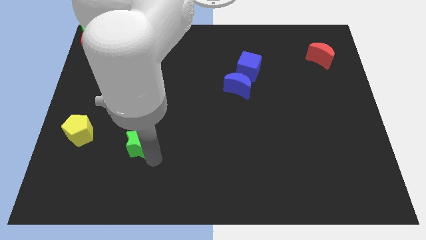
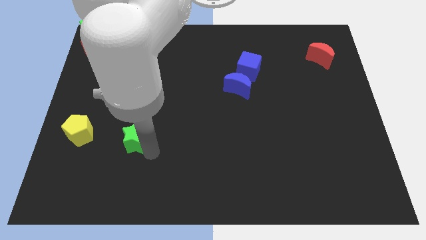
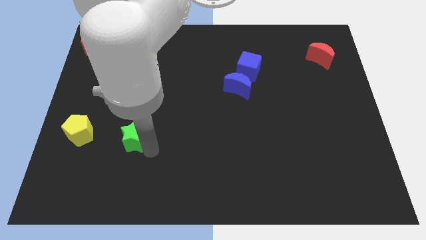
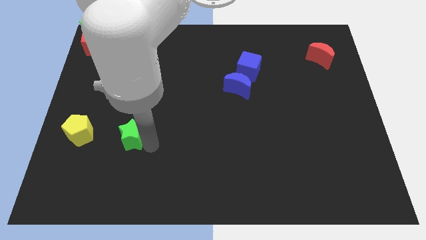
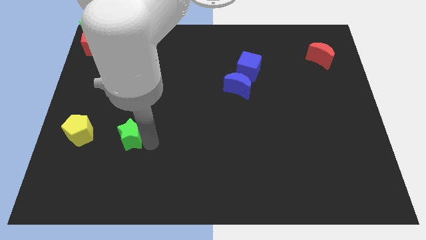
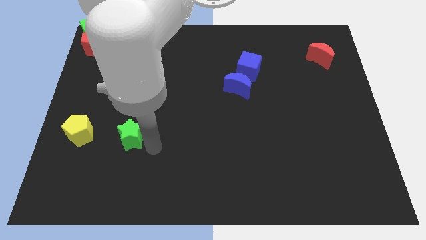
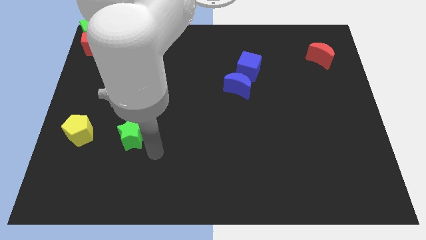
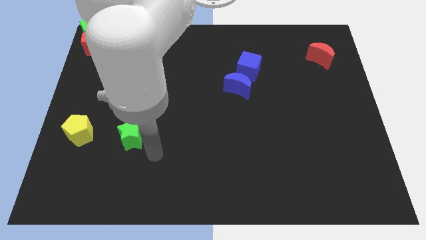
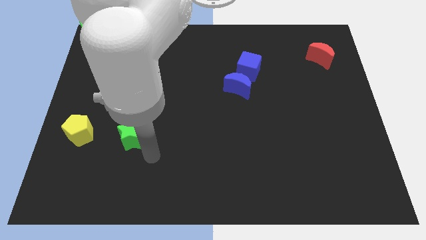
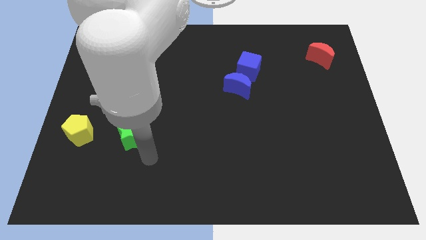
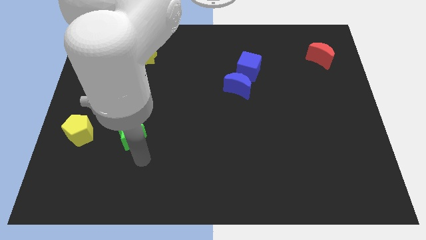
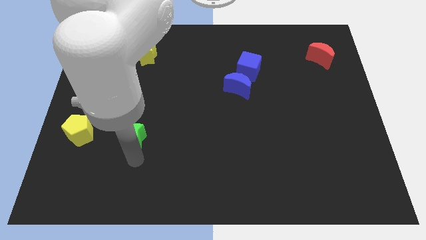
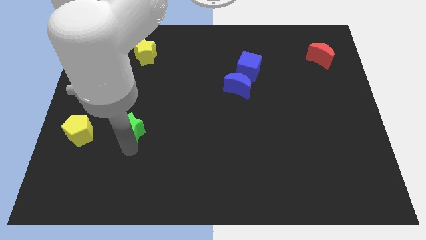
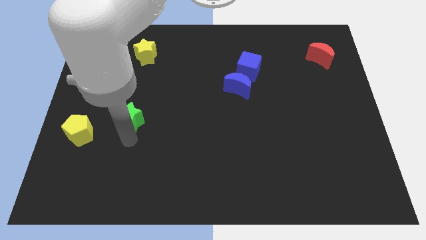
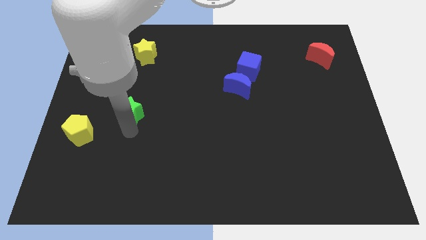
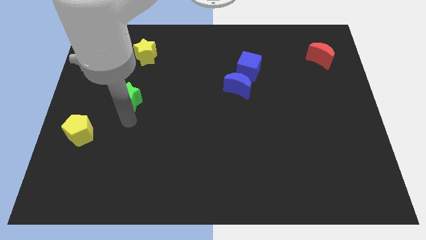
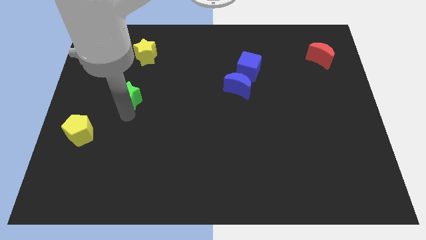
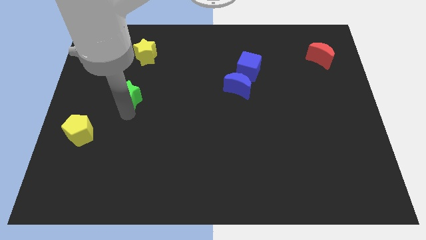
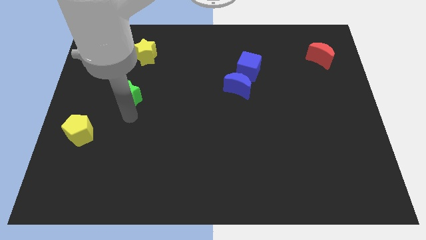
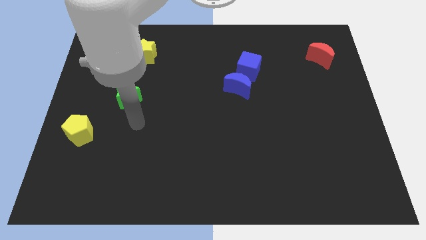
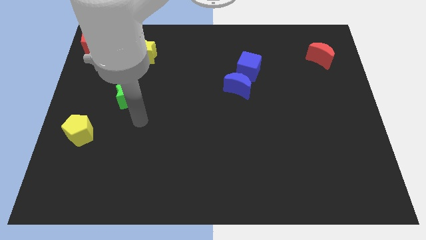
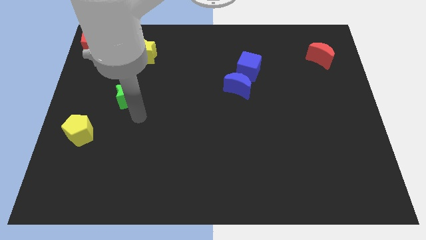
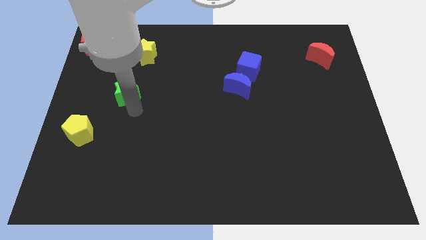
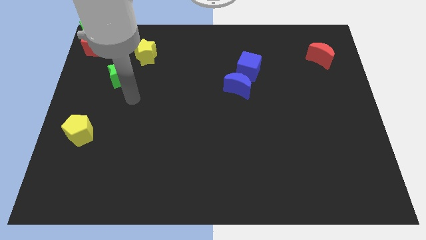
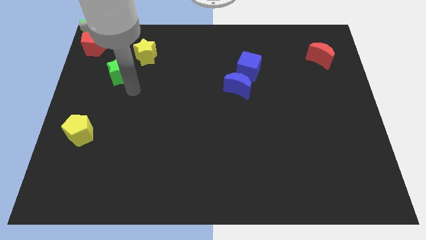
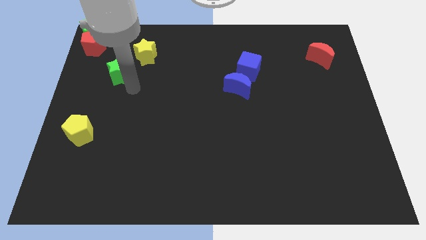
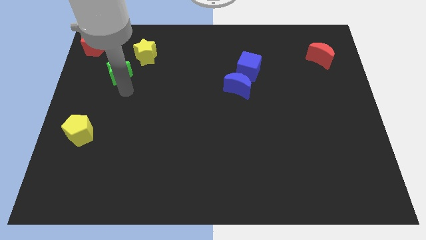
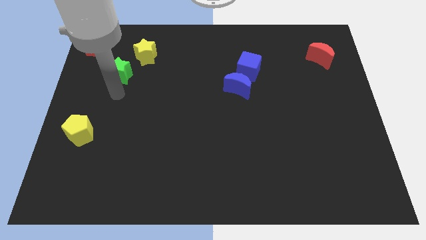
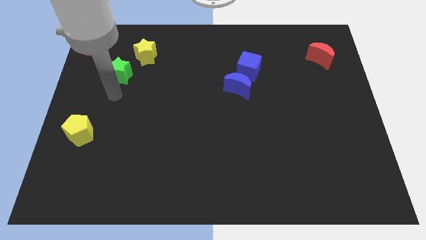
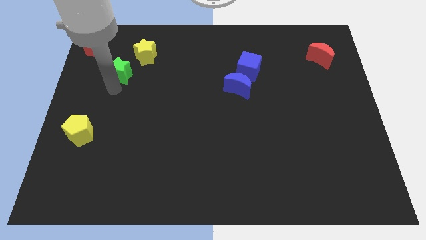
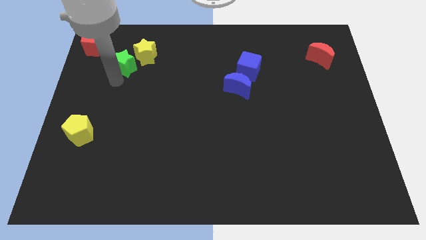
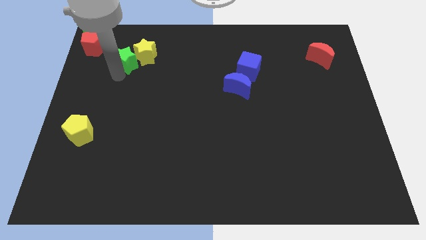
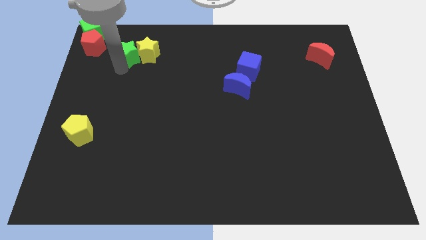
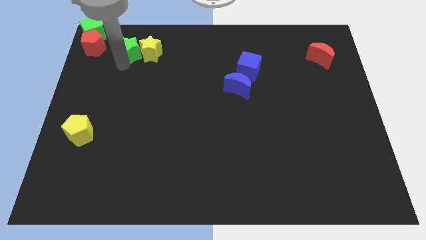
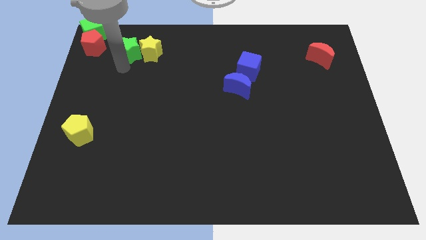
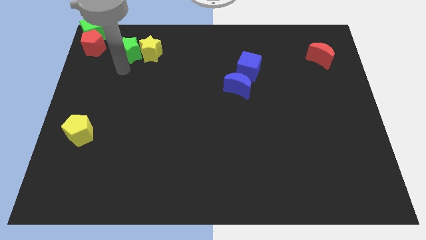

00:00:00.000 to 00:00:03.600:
push the green star to the left of the yellow star

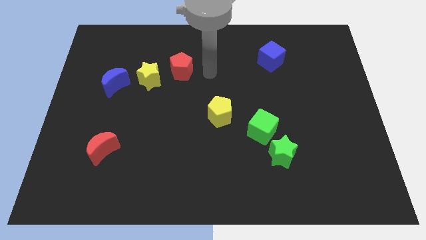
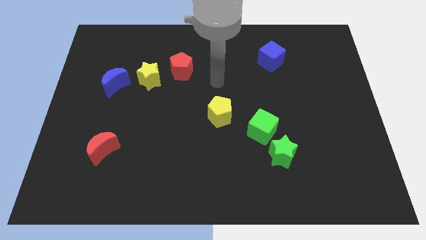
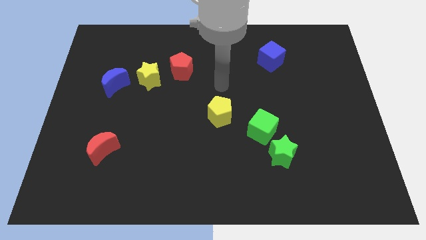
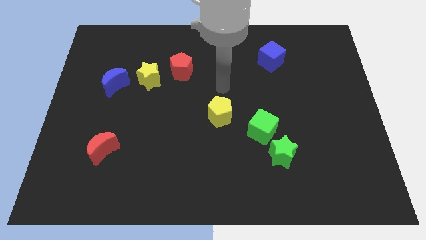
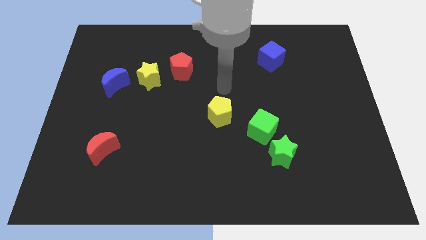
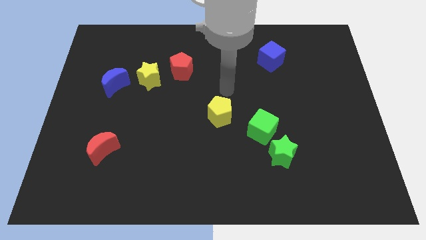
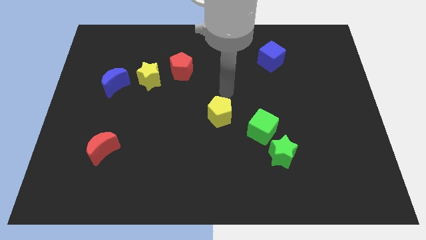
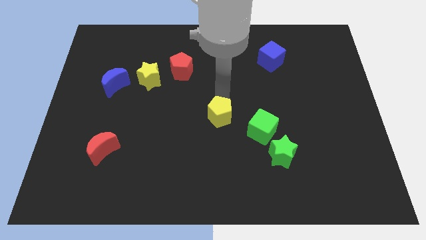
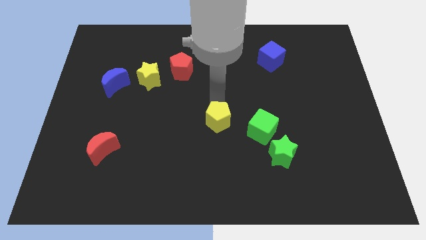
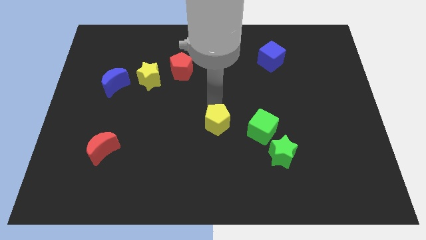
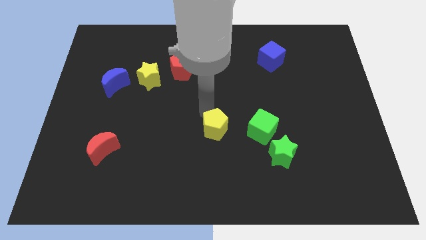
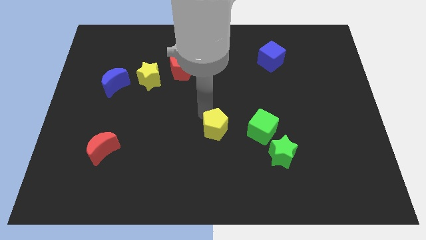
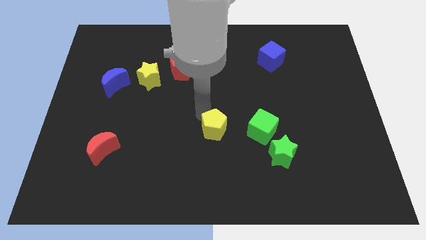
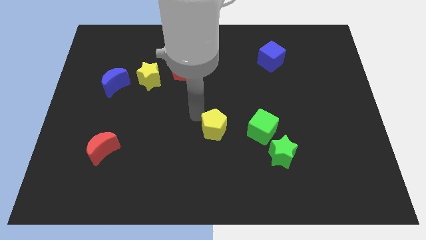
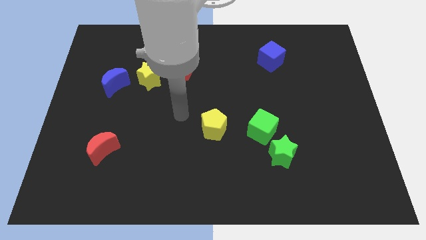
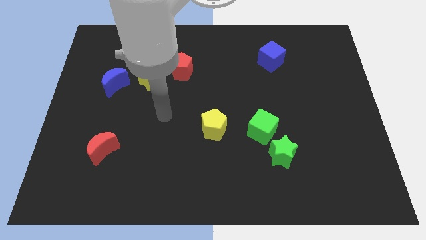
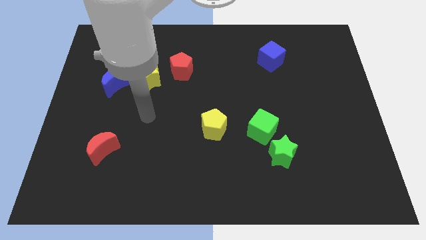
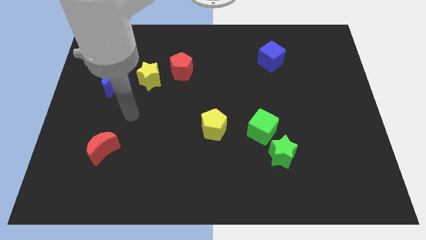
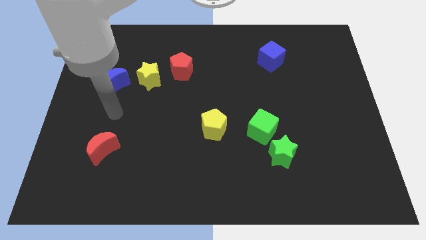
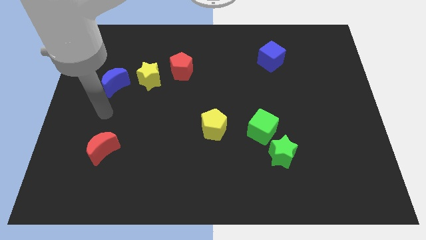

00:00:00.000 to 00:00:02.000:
push the yellow pentagon downwards

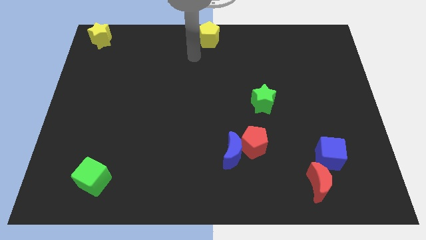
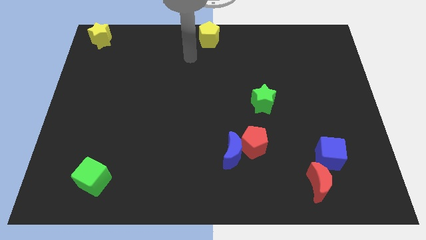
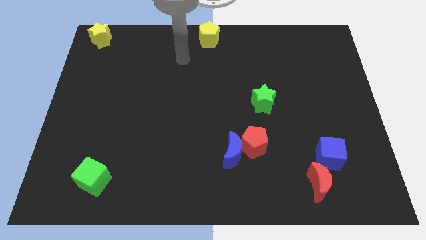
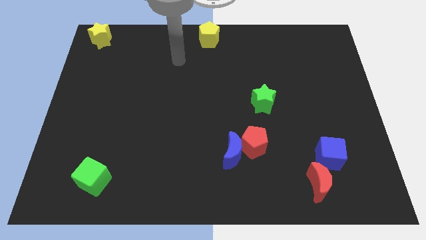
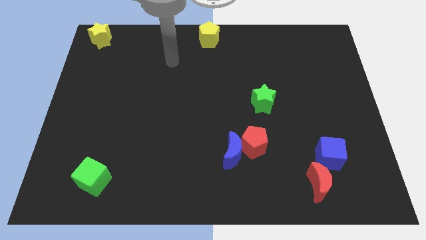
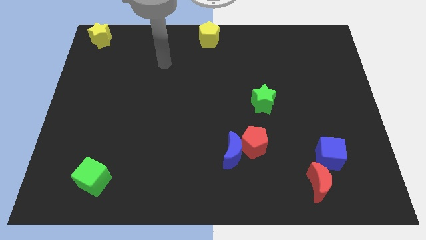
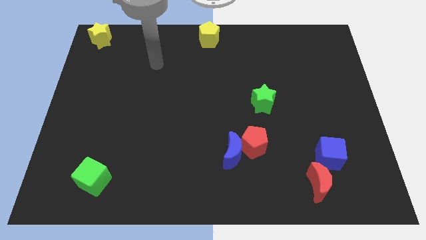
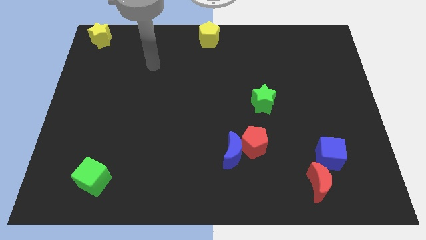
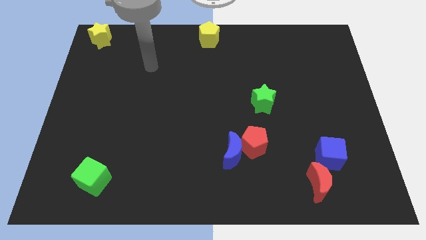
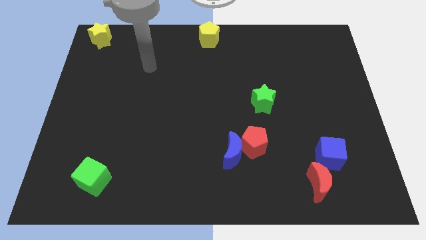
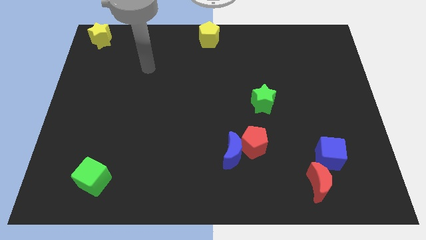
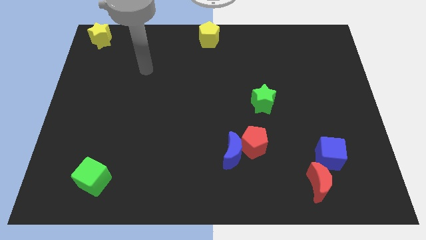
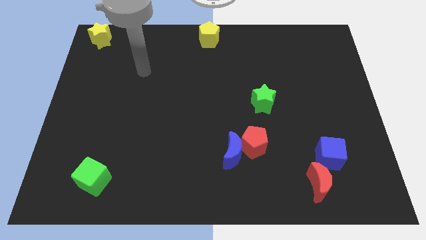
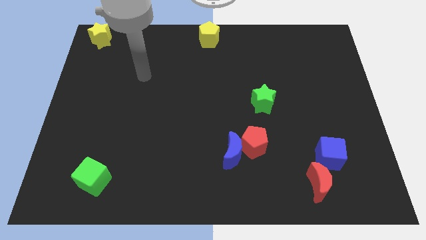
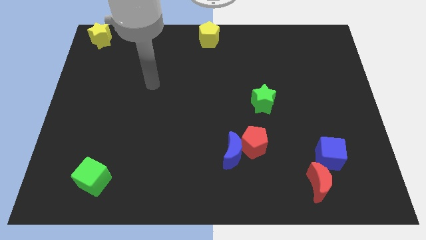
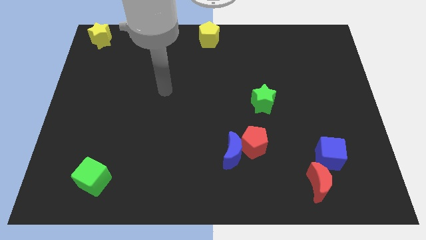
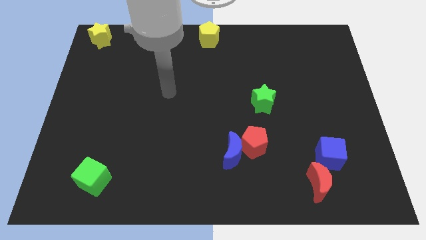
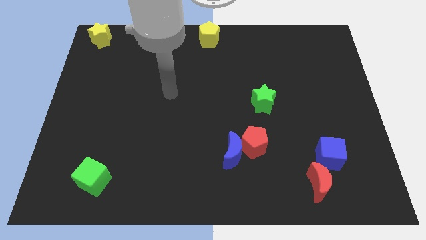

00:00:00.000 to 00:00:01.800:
move the arm away from the yellow pentagon

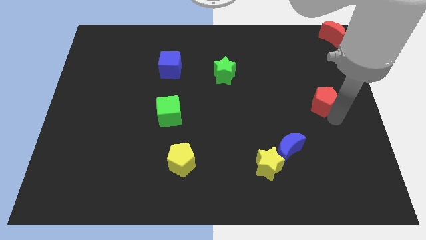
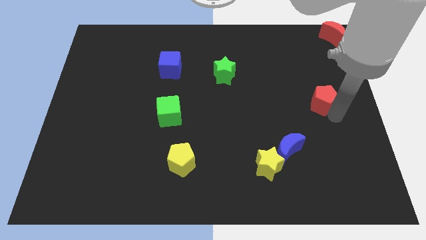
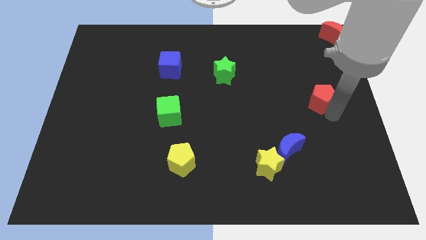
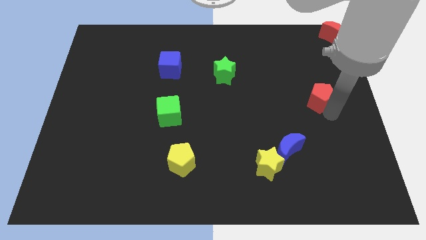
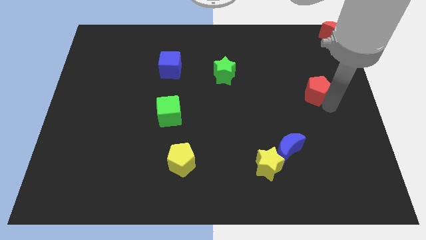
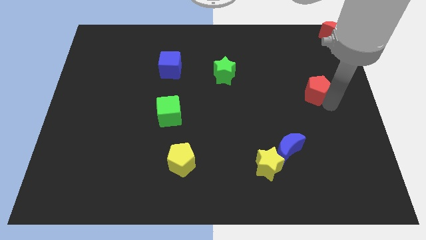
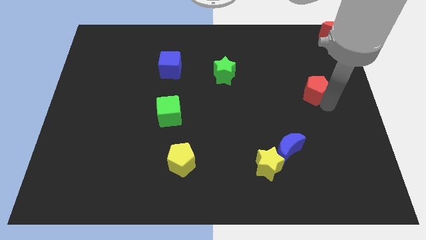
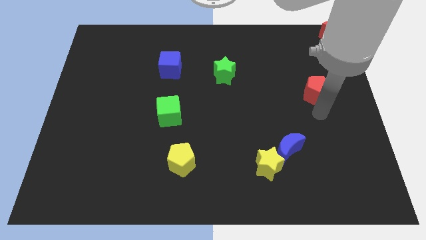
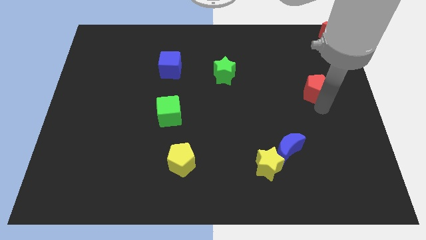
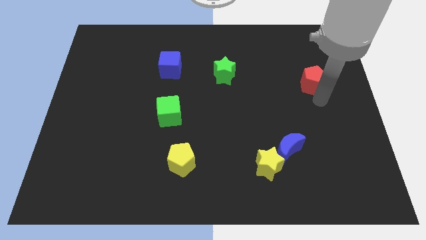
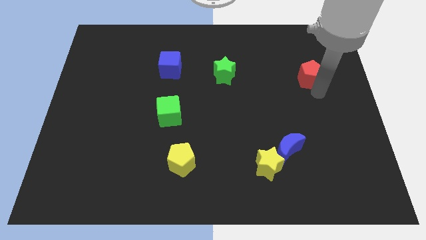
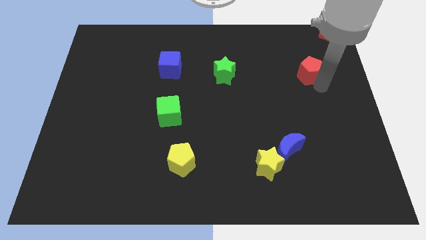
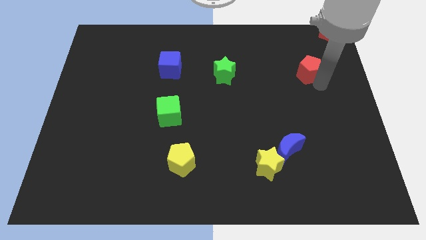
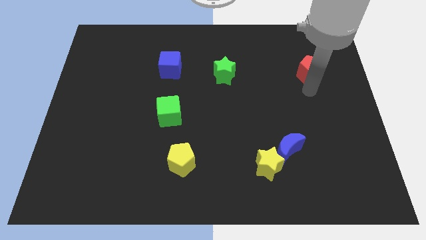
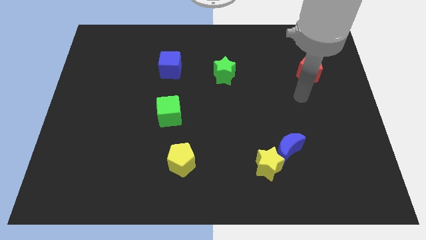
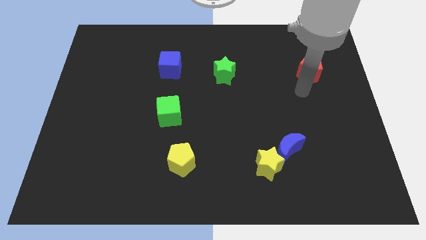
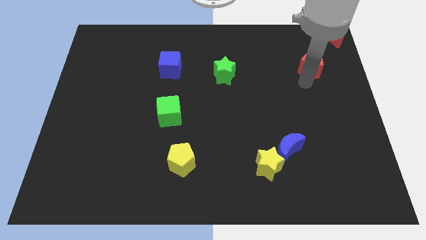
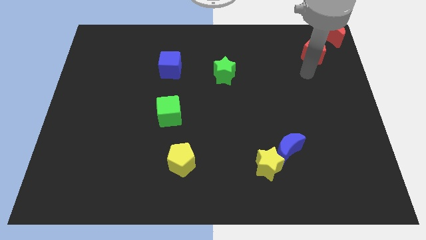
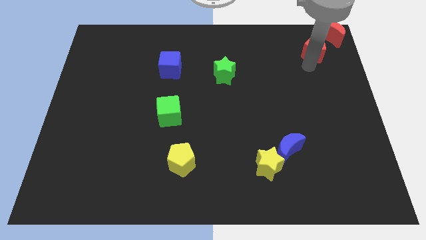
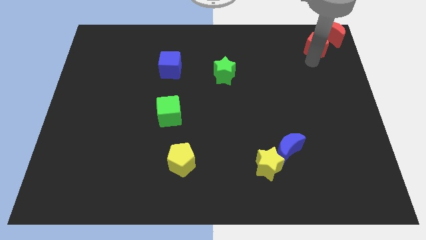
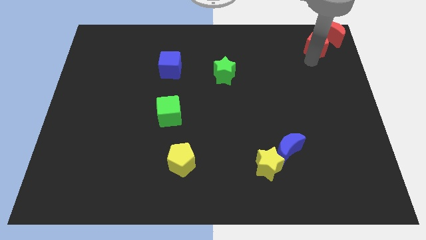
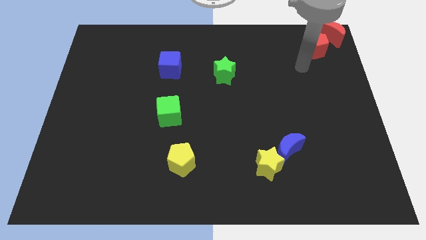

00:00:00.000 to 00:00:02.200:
push the red pentagon towards the bottom of red crescent
